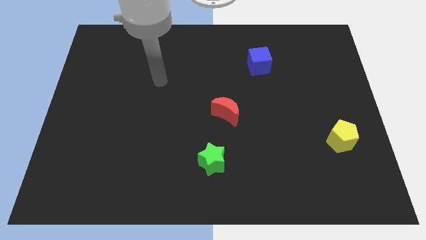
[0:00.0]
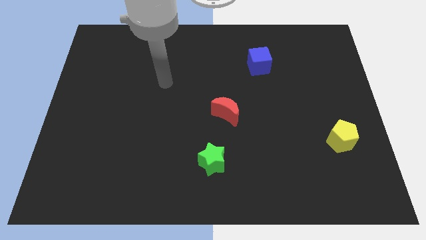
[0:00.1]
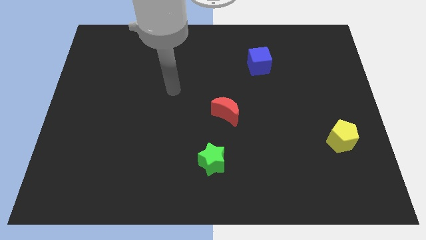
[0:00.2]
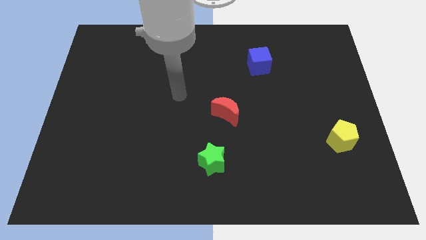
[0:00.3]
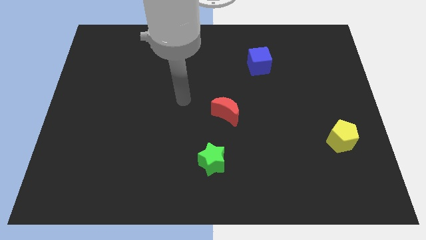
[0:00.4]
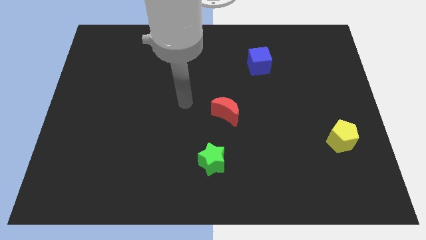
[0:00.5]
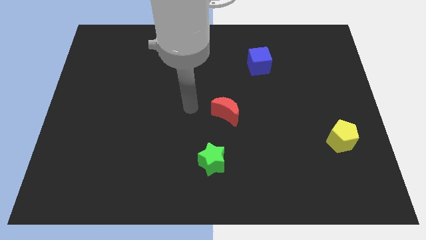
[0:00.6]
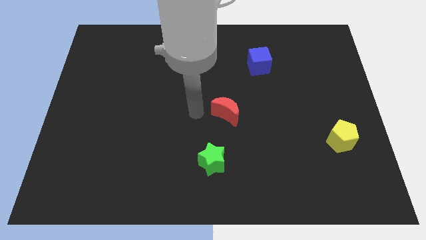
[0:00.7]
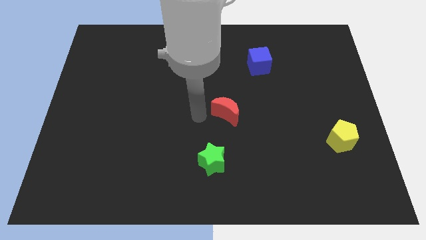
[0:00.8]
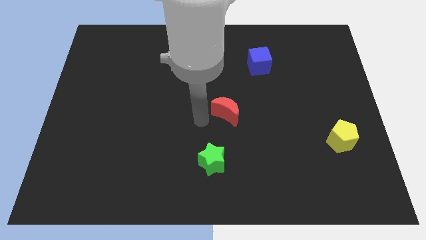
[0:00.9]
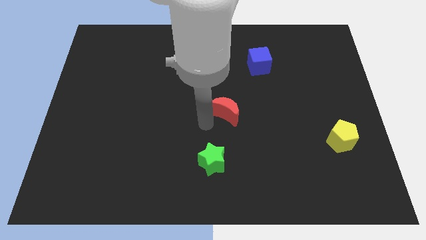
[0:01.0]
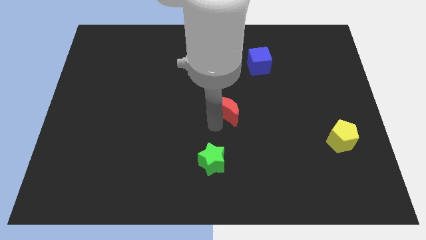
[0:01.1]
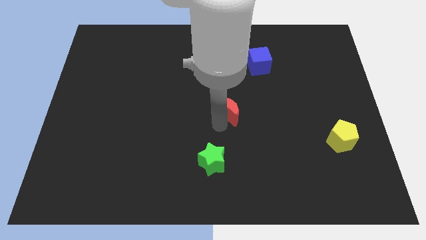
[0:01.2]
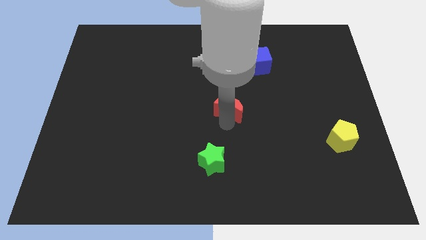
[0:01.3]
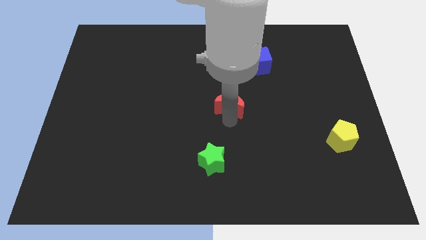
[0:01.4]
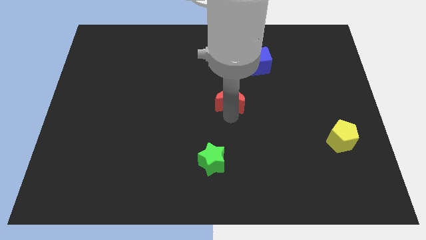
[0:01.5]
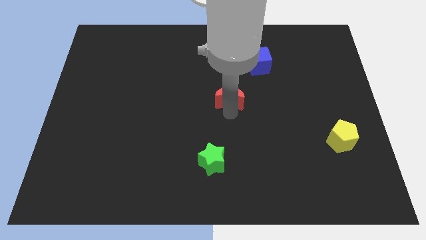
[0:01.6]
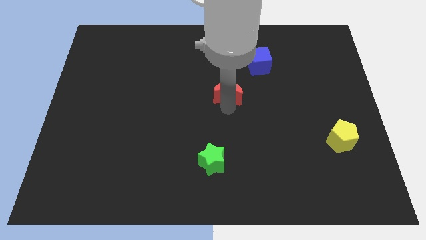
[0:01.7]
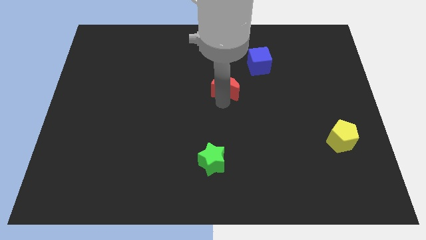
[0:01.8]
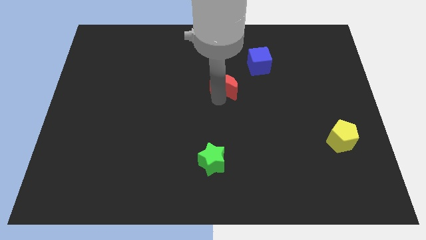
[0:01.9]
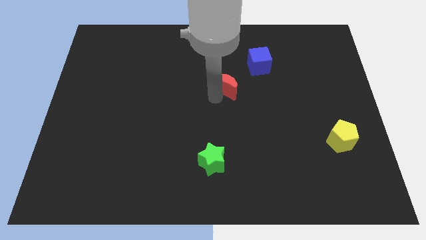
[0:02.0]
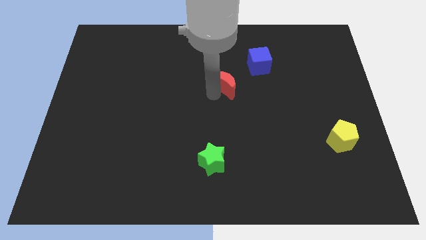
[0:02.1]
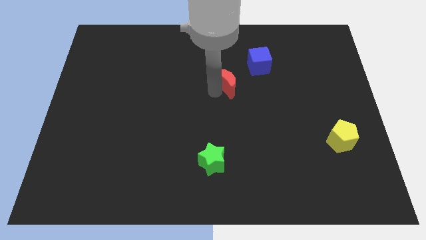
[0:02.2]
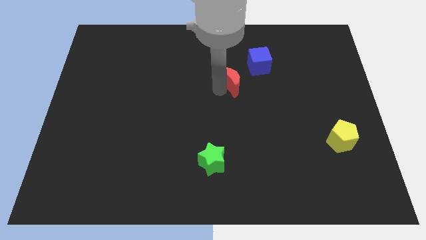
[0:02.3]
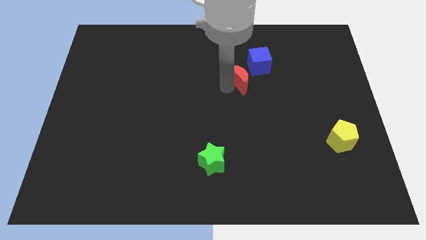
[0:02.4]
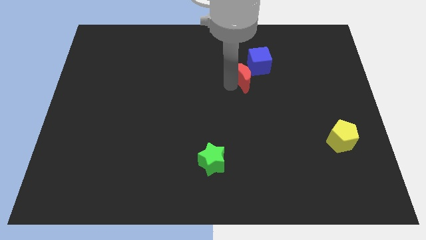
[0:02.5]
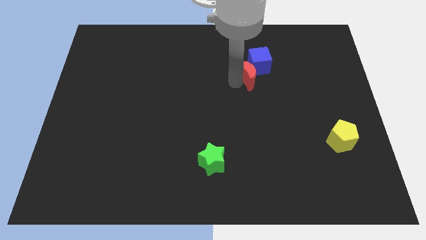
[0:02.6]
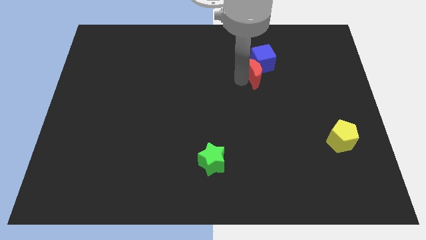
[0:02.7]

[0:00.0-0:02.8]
move the red block close to the blue block

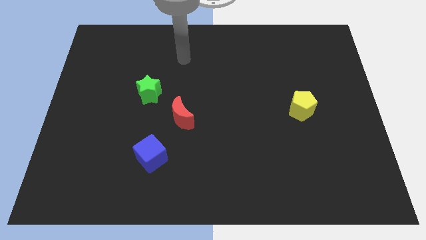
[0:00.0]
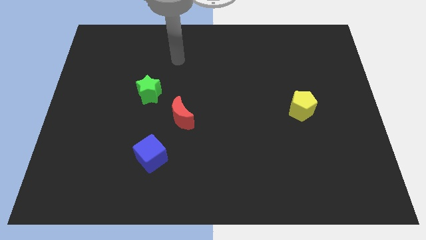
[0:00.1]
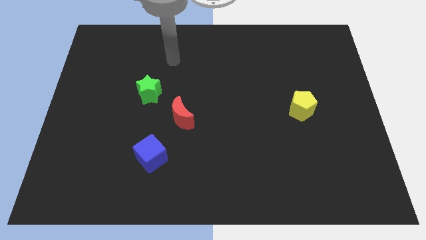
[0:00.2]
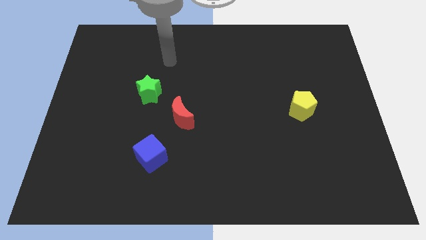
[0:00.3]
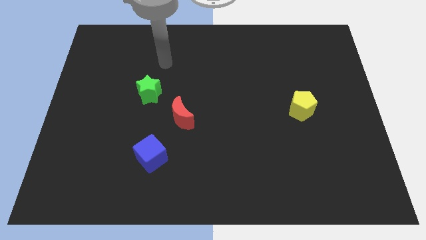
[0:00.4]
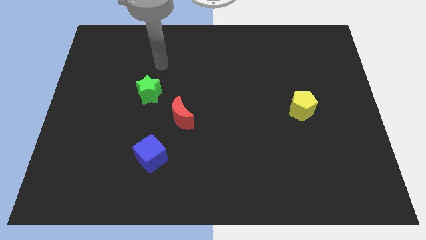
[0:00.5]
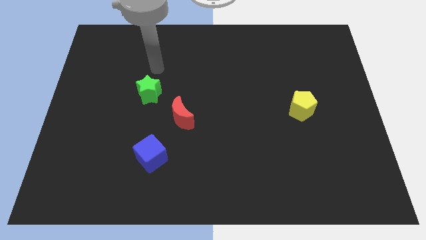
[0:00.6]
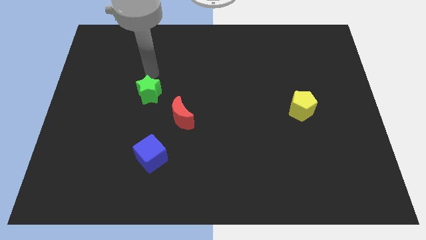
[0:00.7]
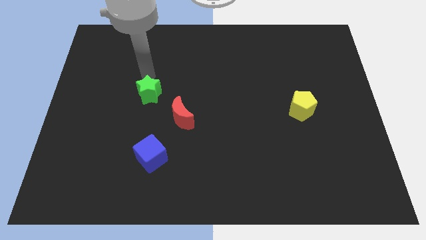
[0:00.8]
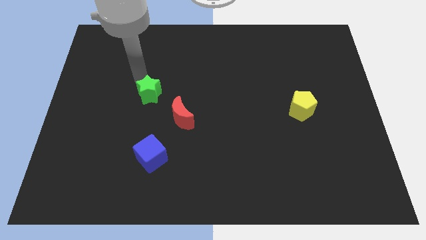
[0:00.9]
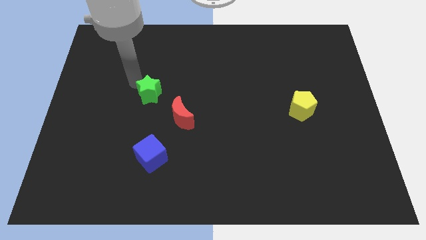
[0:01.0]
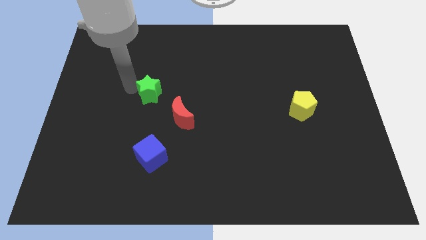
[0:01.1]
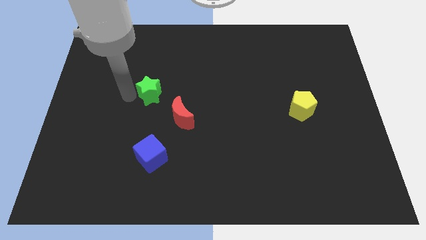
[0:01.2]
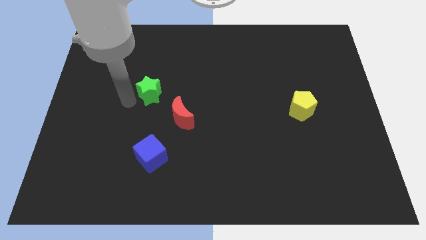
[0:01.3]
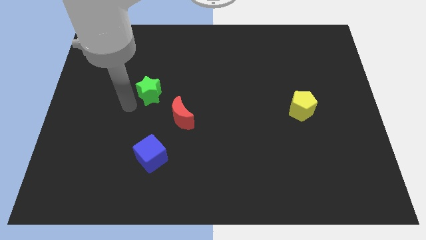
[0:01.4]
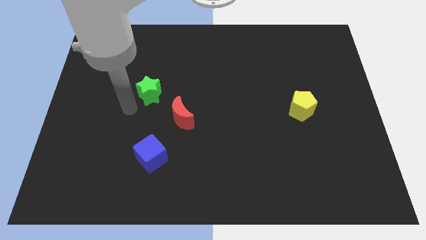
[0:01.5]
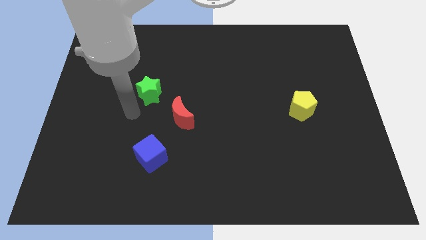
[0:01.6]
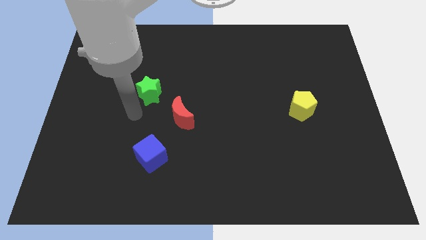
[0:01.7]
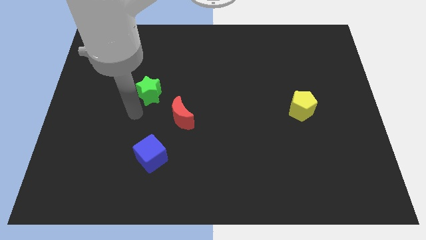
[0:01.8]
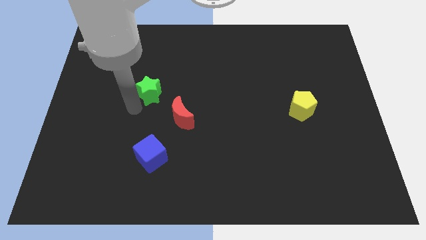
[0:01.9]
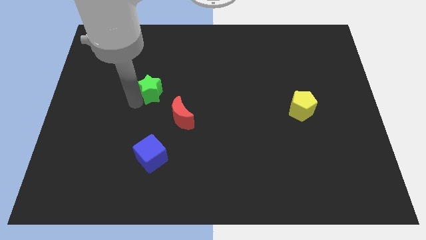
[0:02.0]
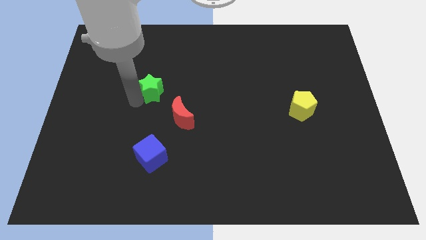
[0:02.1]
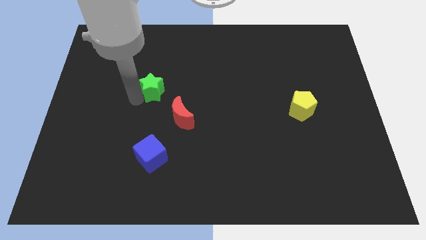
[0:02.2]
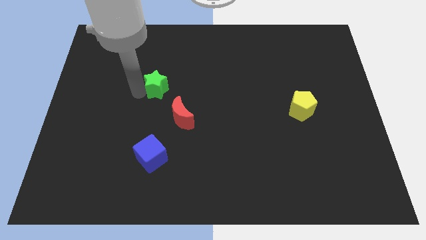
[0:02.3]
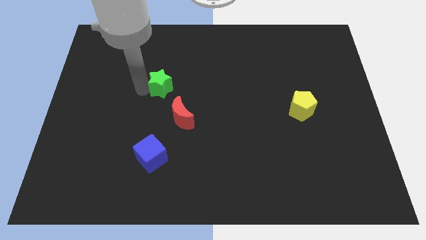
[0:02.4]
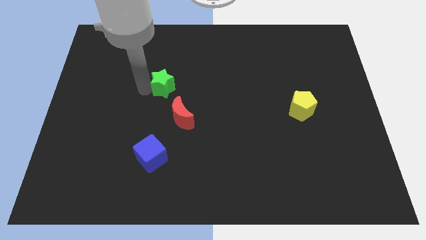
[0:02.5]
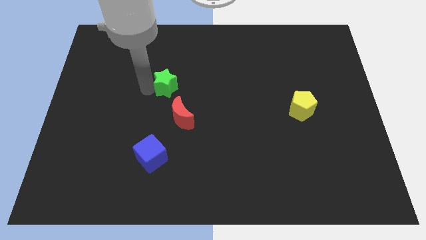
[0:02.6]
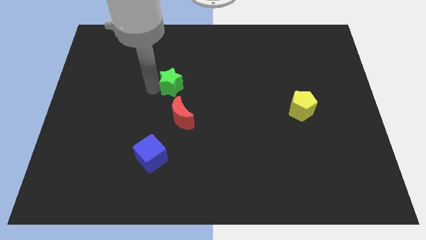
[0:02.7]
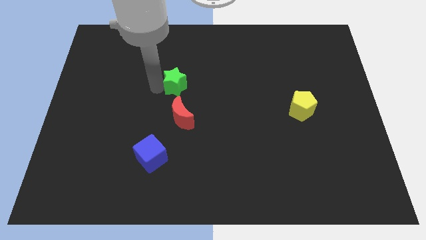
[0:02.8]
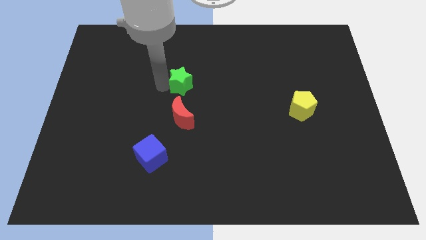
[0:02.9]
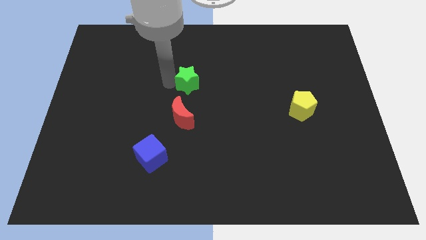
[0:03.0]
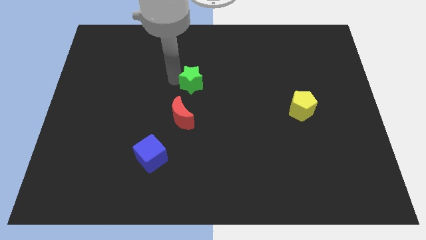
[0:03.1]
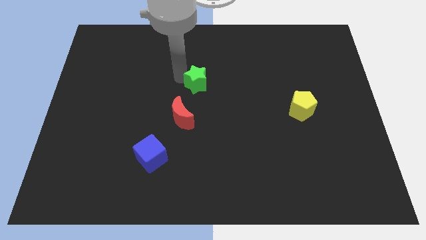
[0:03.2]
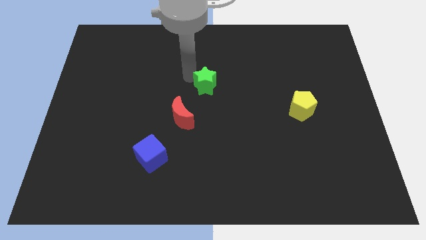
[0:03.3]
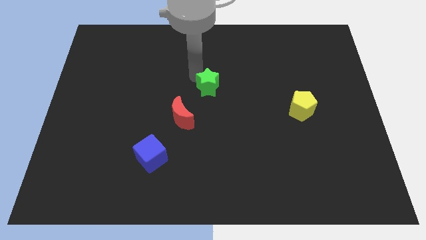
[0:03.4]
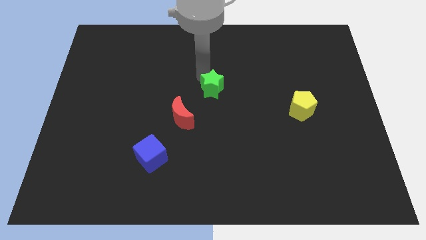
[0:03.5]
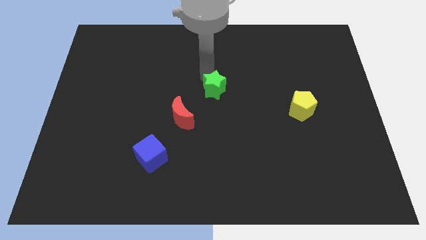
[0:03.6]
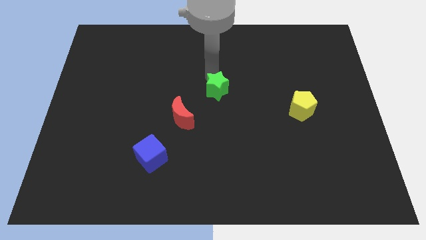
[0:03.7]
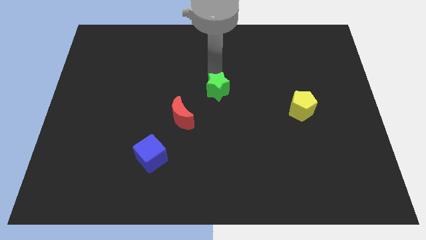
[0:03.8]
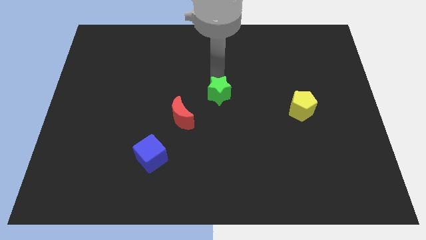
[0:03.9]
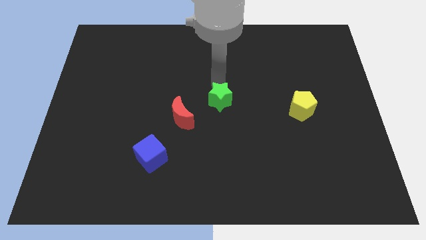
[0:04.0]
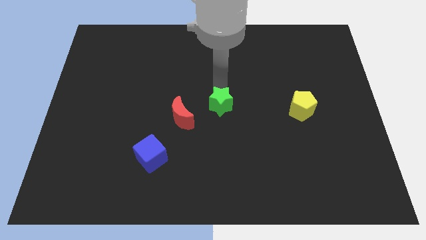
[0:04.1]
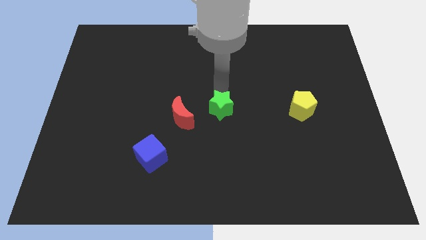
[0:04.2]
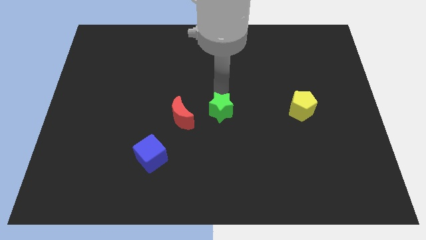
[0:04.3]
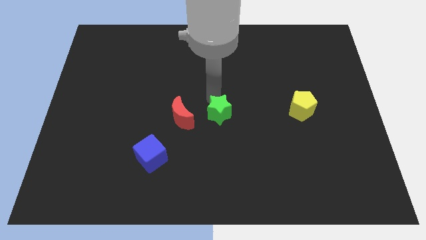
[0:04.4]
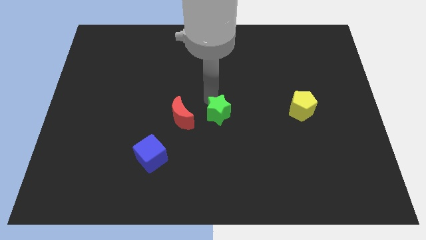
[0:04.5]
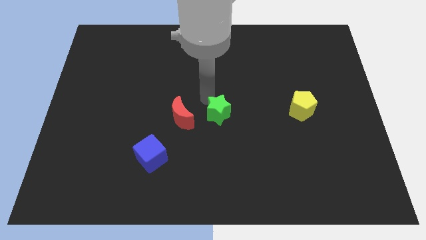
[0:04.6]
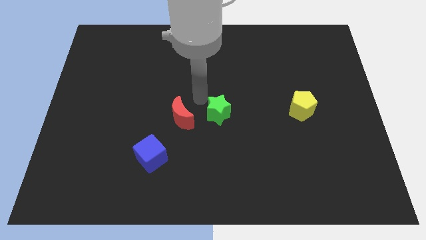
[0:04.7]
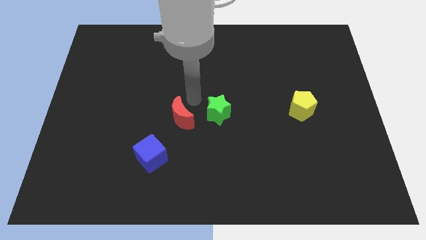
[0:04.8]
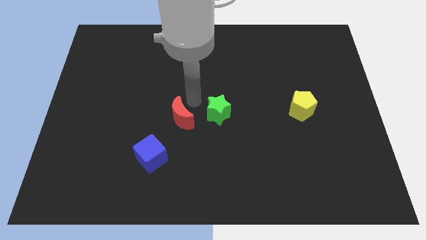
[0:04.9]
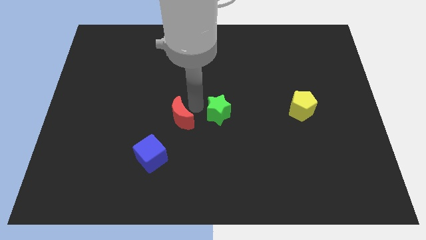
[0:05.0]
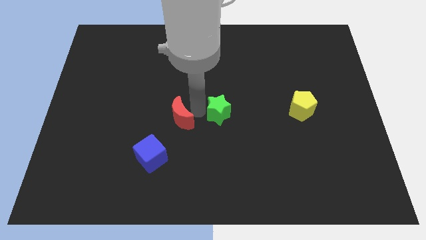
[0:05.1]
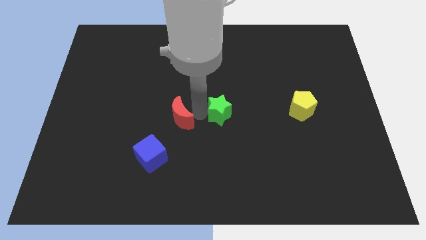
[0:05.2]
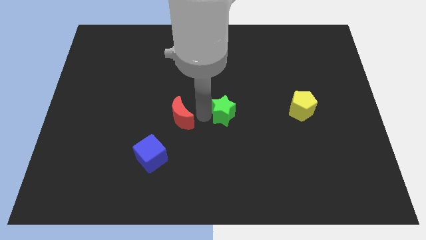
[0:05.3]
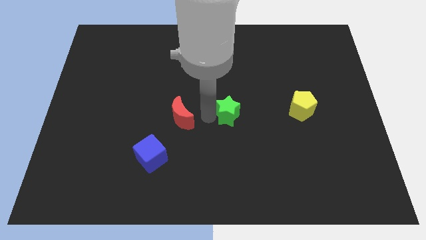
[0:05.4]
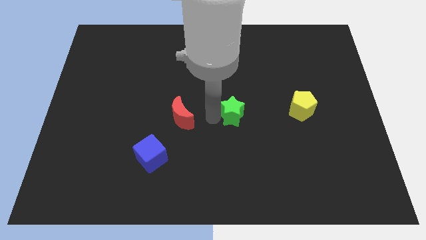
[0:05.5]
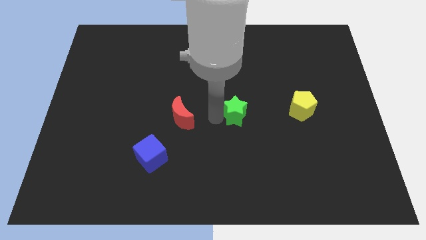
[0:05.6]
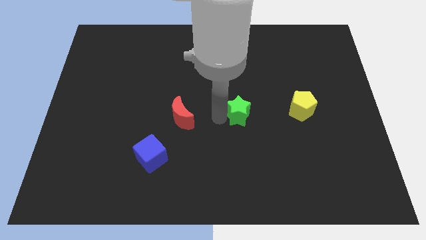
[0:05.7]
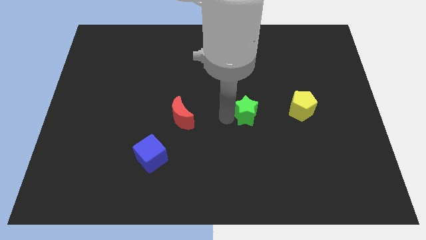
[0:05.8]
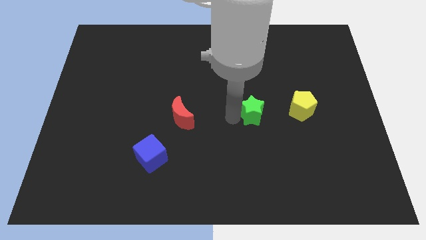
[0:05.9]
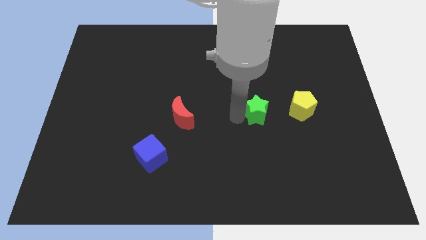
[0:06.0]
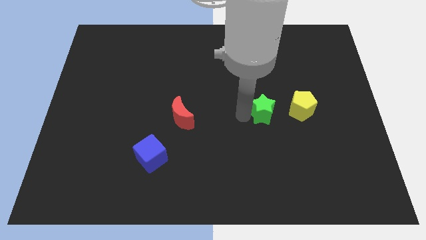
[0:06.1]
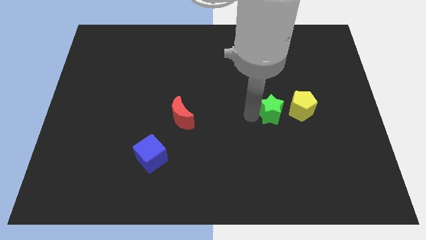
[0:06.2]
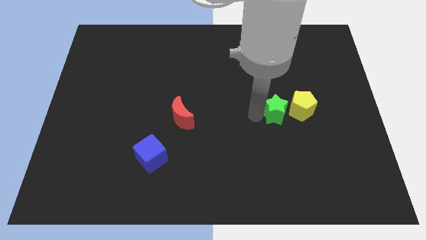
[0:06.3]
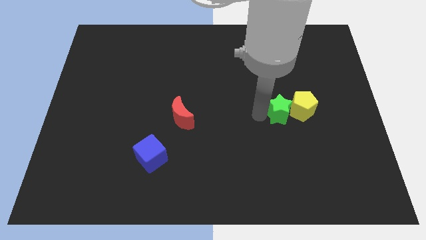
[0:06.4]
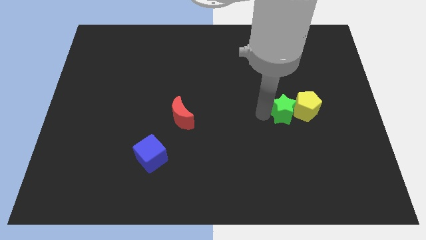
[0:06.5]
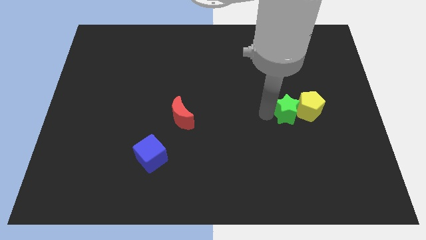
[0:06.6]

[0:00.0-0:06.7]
slide the green block towards the pentagon
